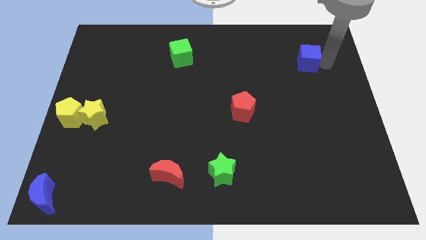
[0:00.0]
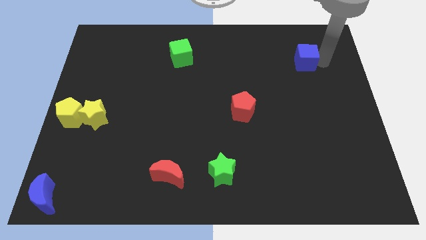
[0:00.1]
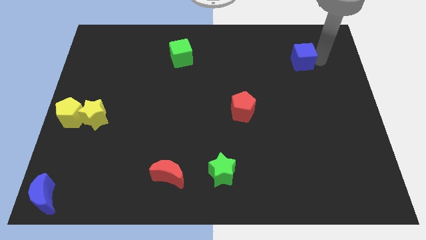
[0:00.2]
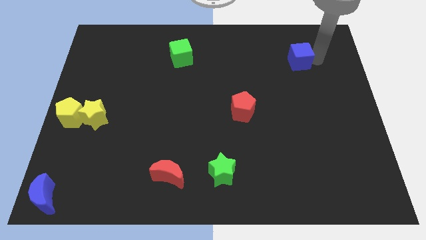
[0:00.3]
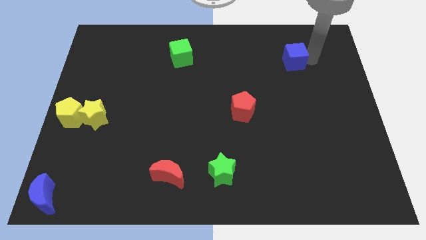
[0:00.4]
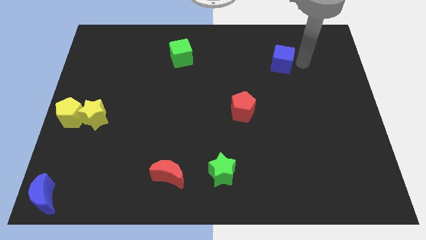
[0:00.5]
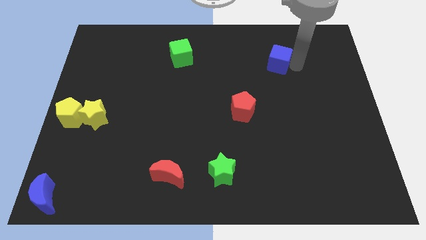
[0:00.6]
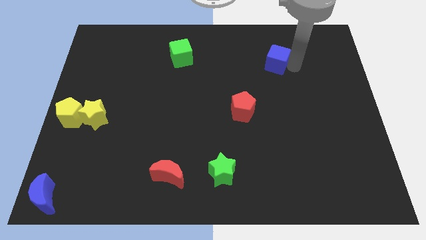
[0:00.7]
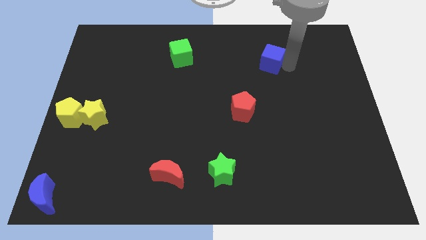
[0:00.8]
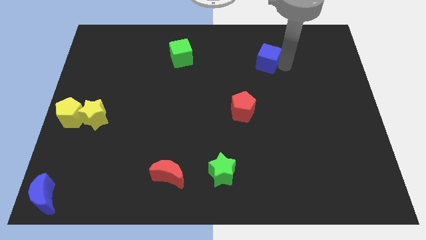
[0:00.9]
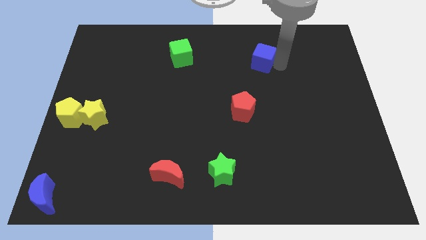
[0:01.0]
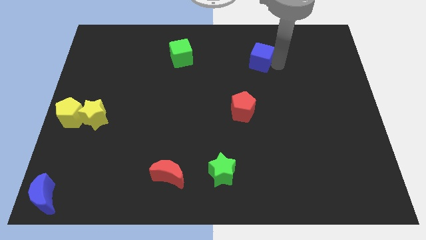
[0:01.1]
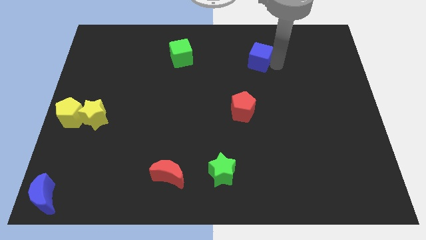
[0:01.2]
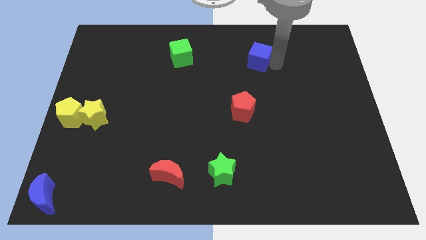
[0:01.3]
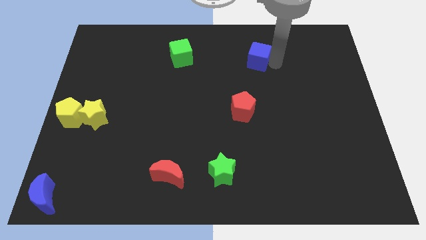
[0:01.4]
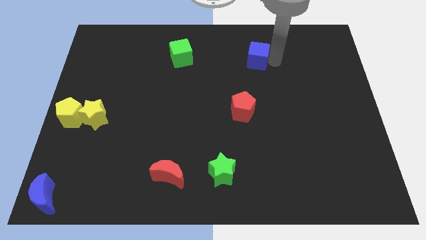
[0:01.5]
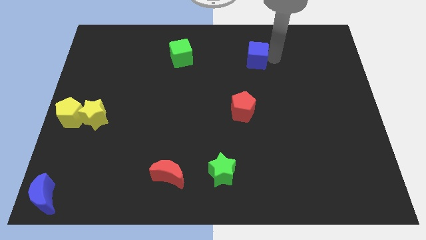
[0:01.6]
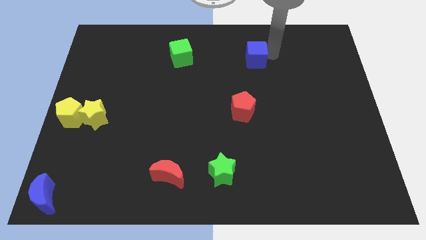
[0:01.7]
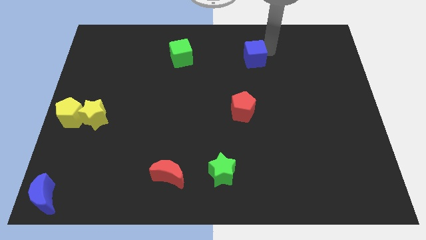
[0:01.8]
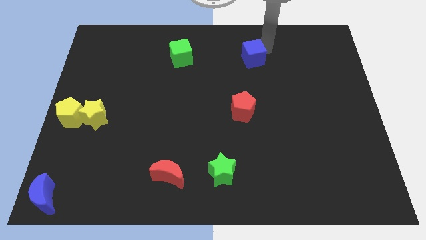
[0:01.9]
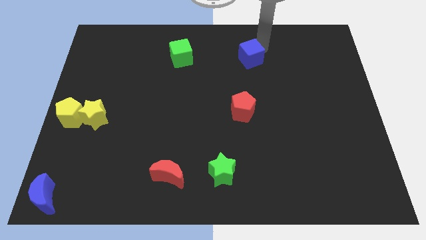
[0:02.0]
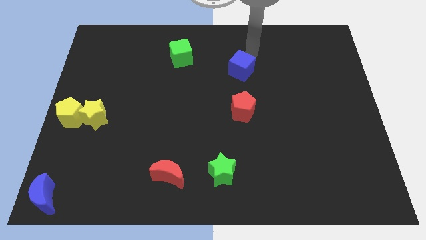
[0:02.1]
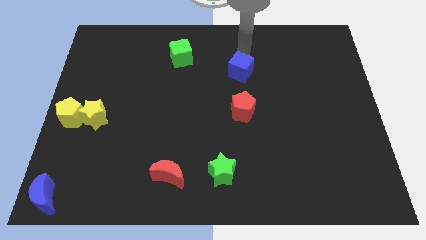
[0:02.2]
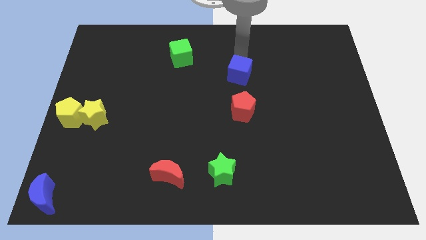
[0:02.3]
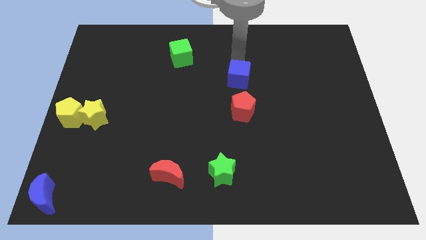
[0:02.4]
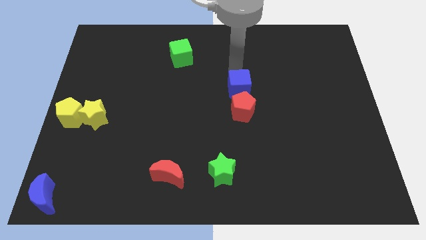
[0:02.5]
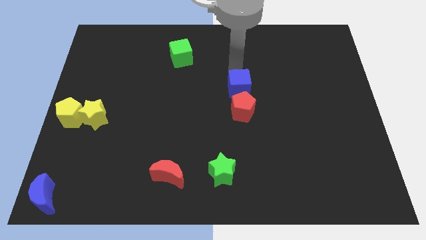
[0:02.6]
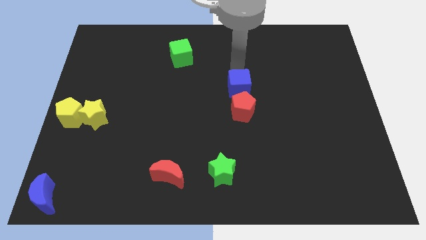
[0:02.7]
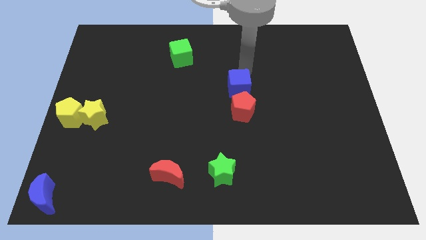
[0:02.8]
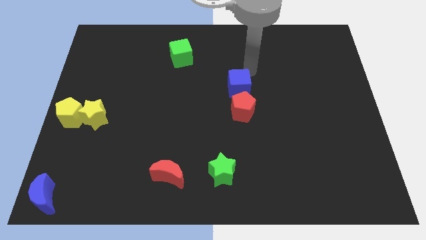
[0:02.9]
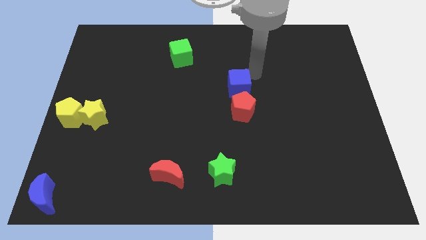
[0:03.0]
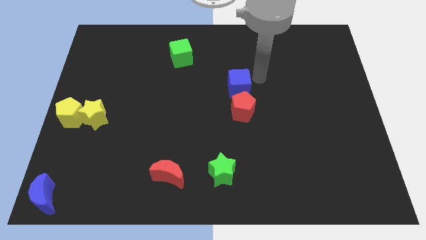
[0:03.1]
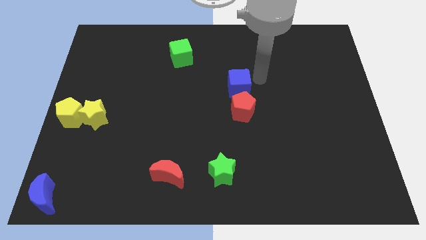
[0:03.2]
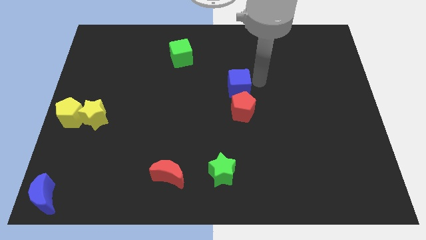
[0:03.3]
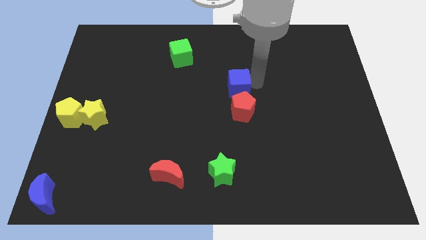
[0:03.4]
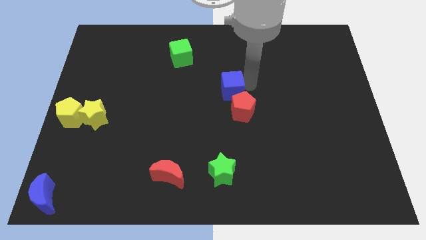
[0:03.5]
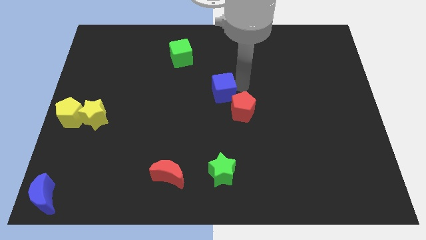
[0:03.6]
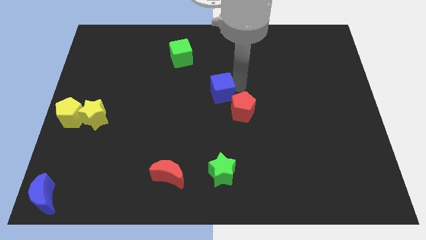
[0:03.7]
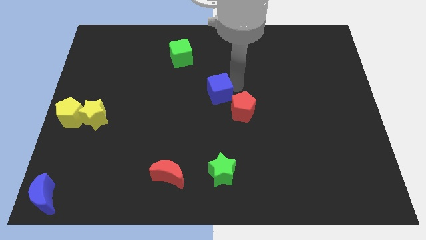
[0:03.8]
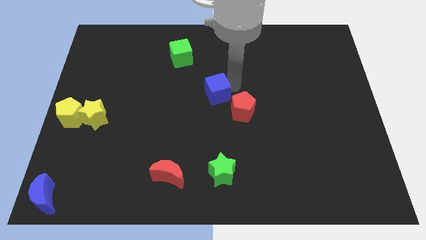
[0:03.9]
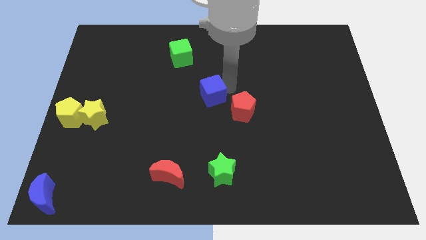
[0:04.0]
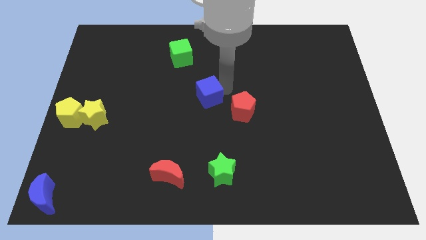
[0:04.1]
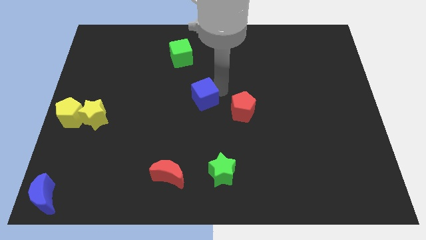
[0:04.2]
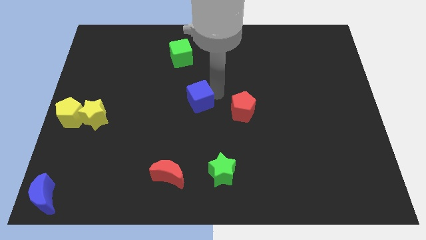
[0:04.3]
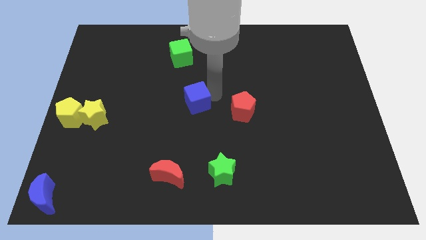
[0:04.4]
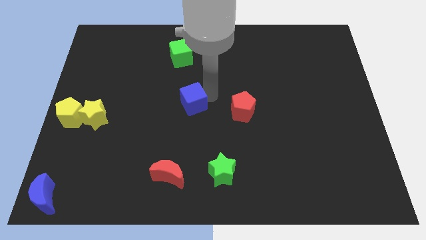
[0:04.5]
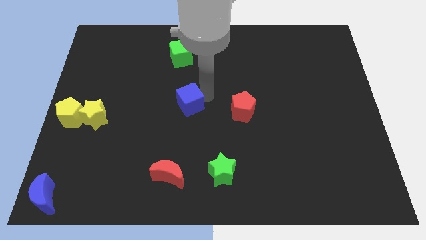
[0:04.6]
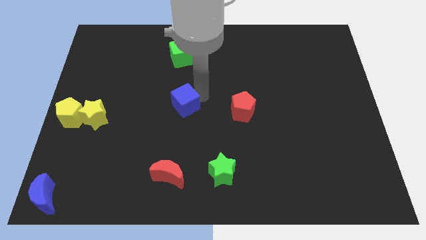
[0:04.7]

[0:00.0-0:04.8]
move the blue cube at the center

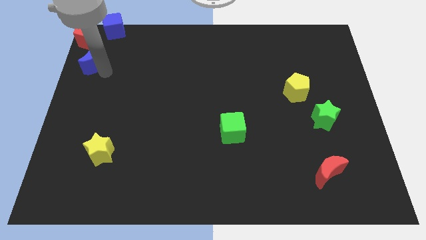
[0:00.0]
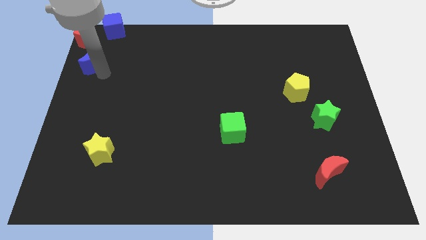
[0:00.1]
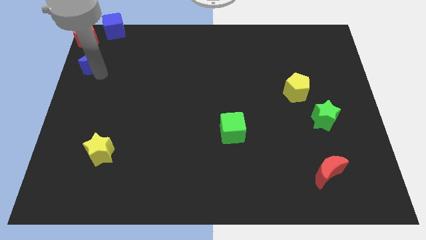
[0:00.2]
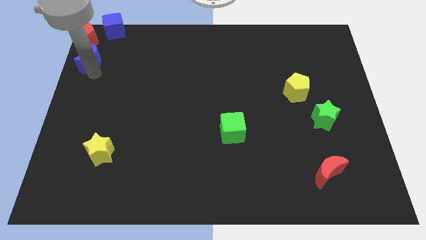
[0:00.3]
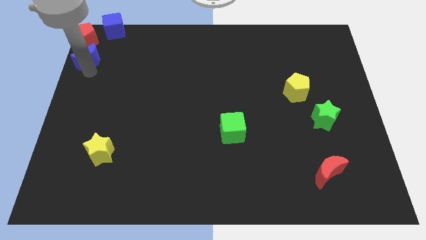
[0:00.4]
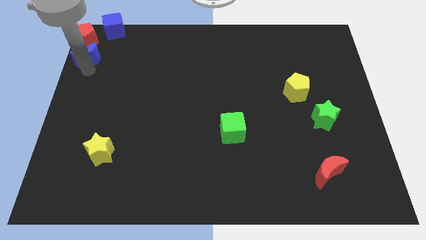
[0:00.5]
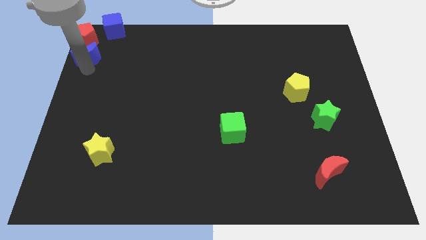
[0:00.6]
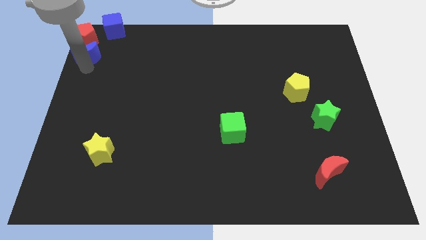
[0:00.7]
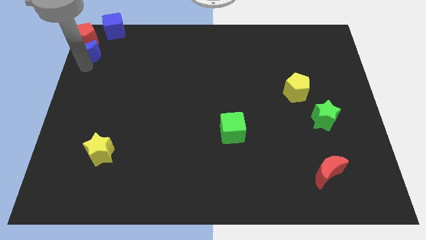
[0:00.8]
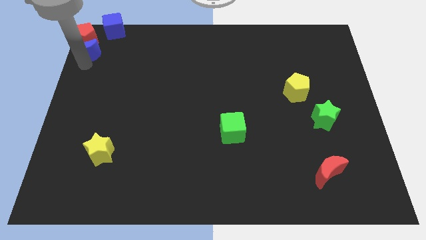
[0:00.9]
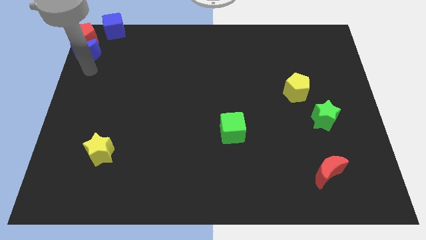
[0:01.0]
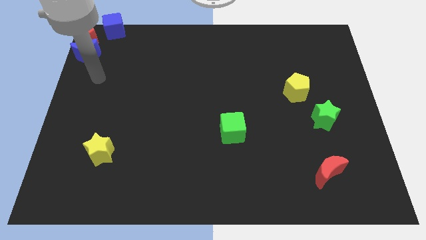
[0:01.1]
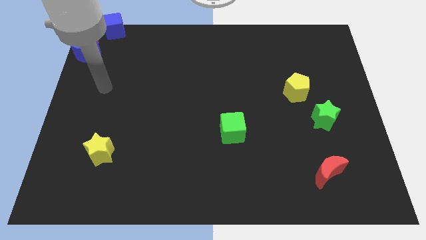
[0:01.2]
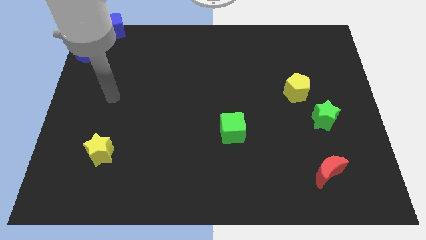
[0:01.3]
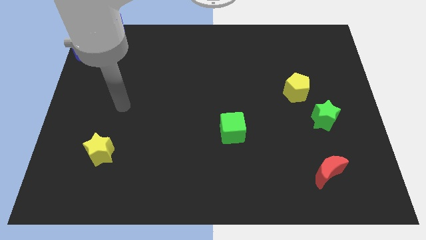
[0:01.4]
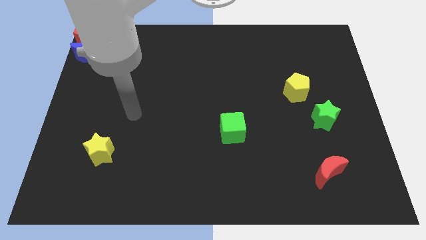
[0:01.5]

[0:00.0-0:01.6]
put blue crescent at the bottom of red pentagon

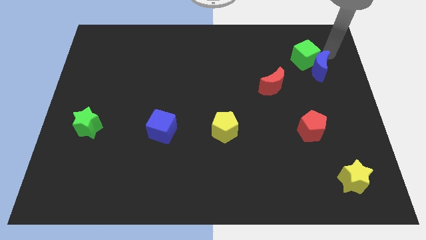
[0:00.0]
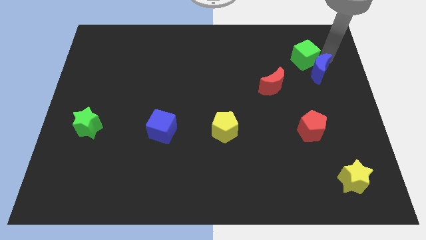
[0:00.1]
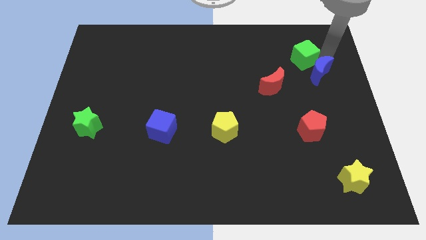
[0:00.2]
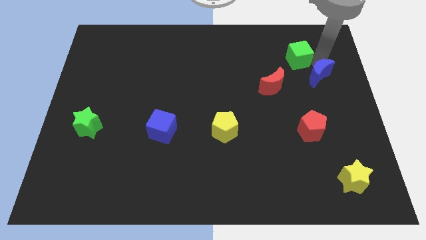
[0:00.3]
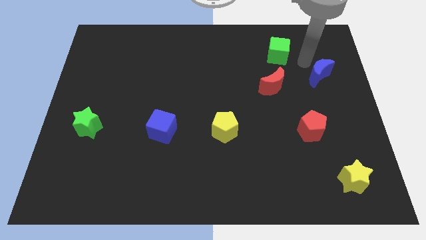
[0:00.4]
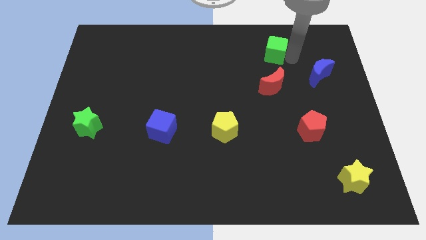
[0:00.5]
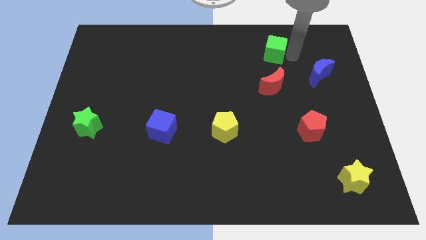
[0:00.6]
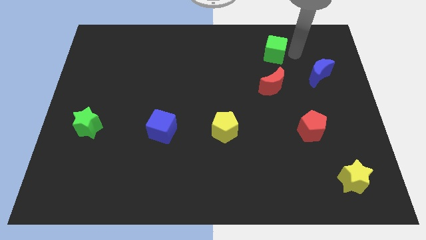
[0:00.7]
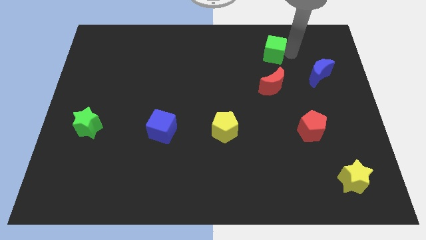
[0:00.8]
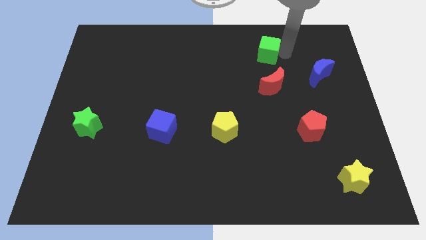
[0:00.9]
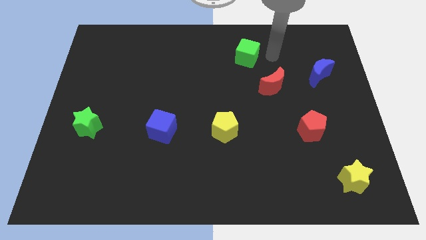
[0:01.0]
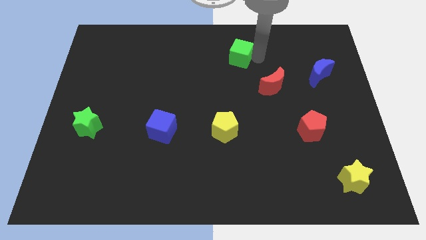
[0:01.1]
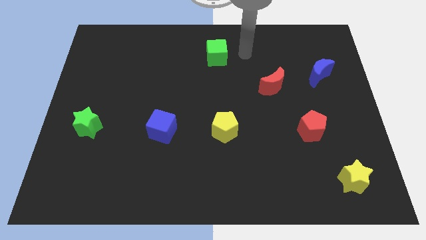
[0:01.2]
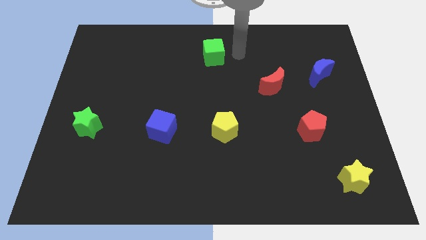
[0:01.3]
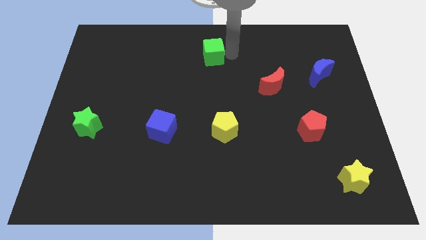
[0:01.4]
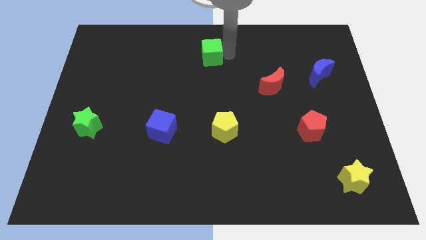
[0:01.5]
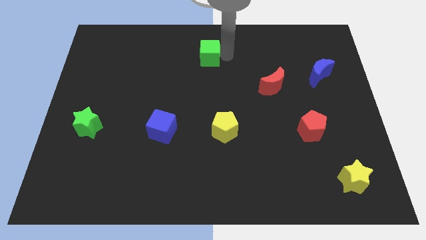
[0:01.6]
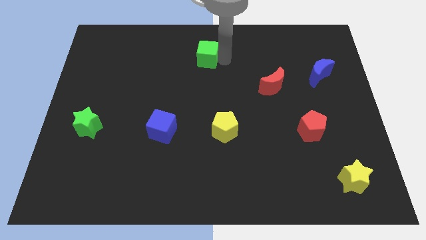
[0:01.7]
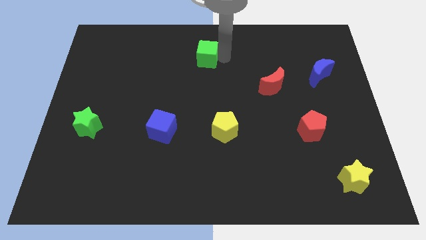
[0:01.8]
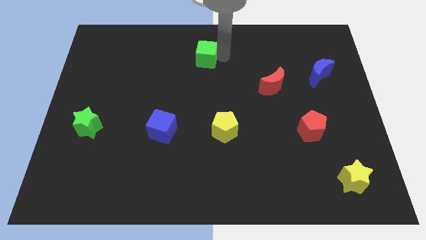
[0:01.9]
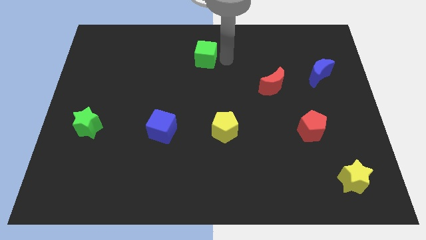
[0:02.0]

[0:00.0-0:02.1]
separate the green cube from the blue crescent

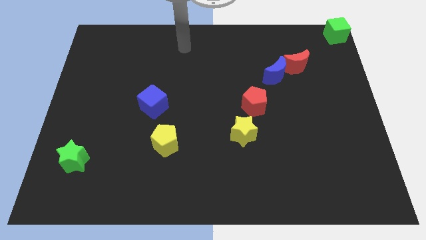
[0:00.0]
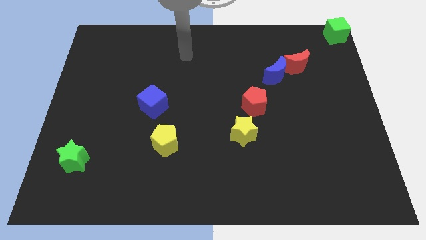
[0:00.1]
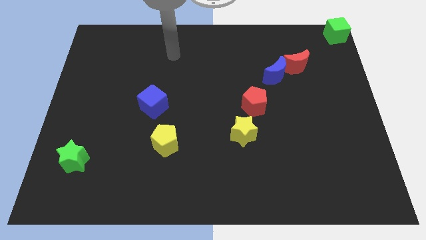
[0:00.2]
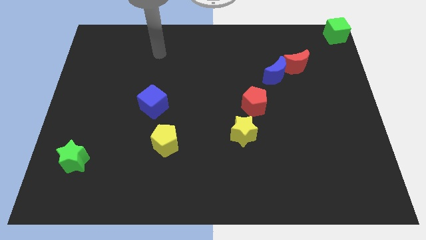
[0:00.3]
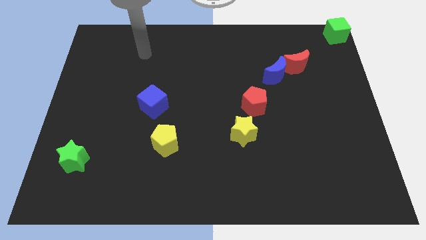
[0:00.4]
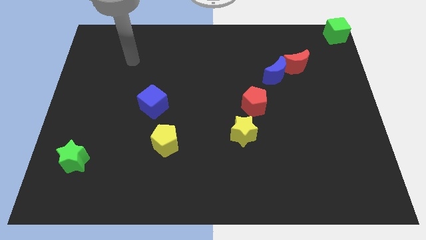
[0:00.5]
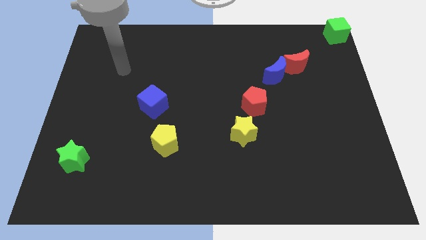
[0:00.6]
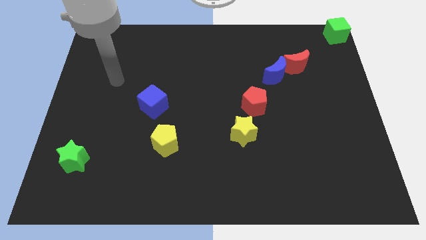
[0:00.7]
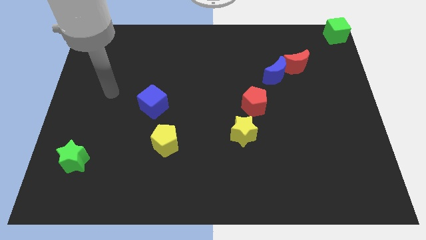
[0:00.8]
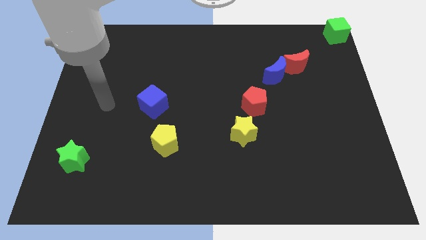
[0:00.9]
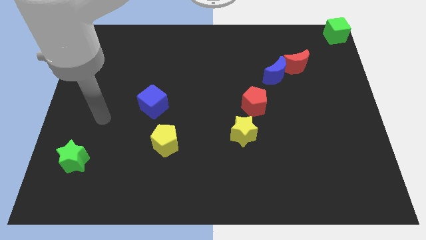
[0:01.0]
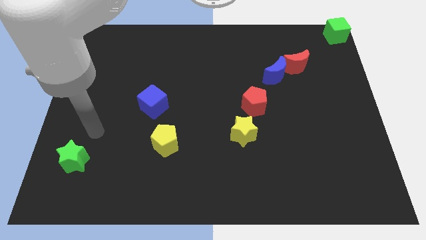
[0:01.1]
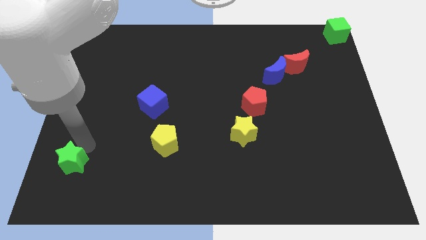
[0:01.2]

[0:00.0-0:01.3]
move your arm to the top of the green star
